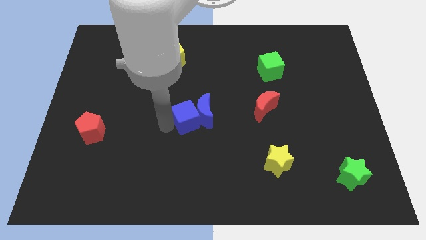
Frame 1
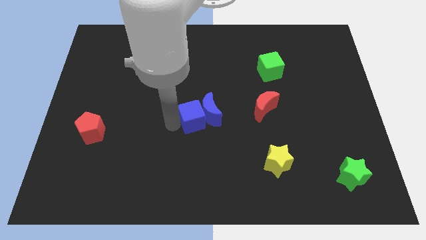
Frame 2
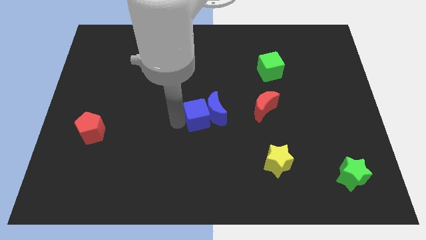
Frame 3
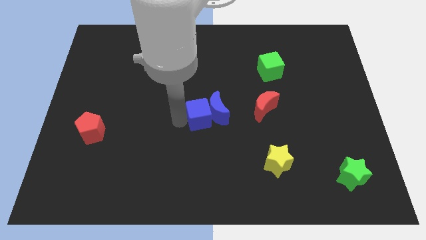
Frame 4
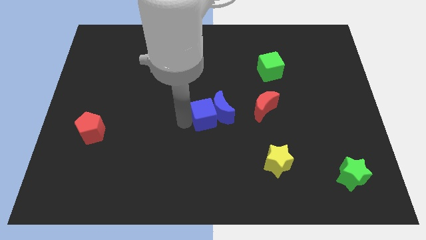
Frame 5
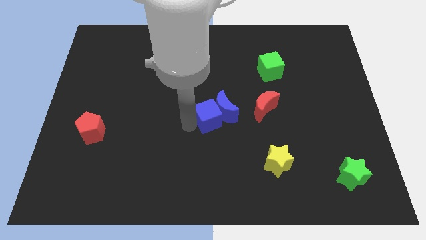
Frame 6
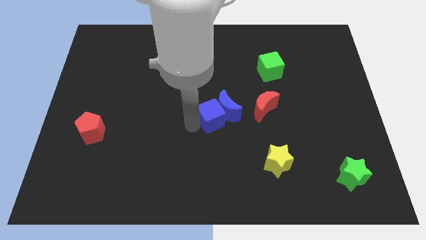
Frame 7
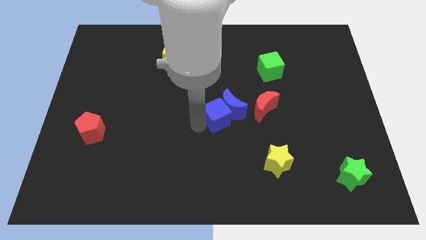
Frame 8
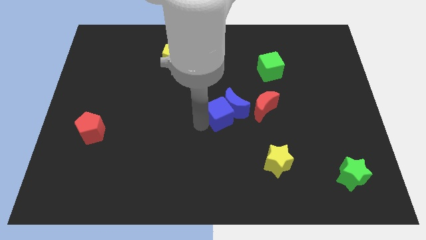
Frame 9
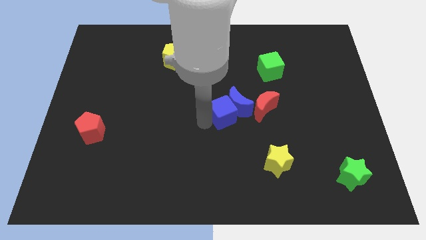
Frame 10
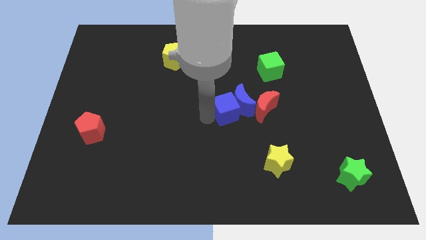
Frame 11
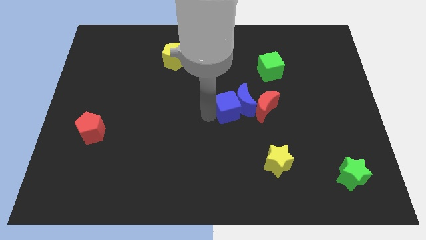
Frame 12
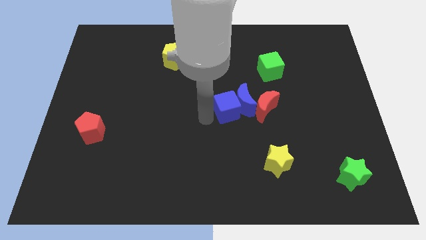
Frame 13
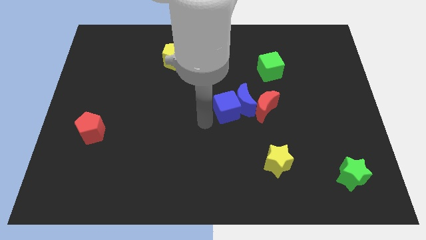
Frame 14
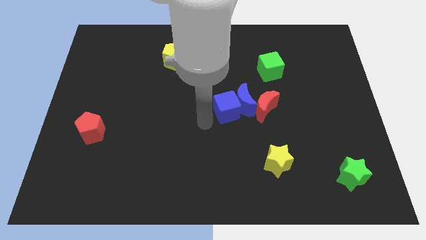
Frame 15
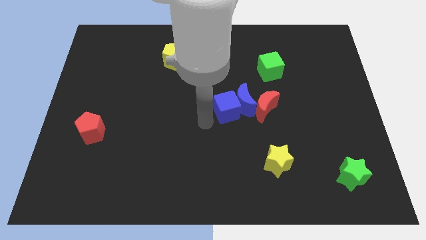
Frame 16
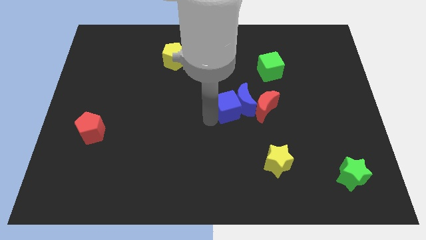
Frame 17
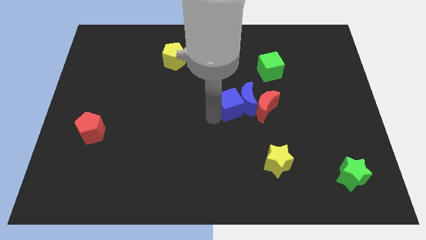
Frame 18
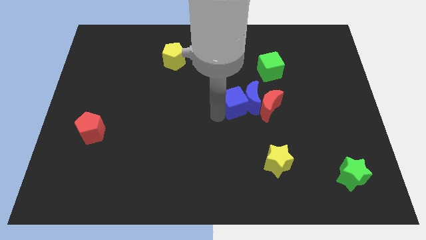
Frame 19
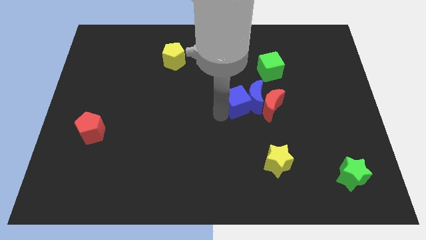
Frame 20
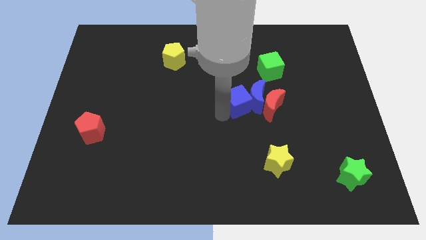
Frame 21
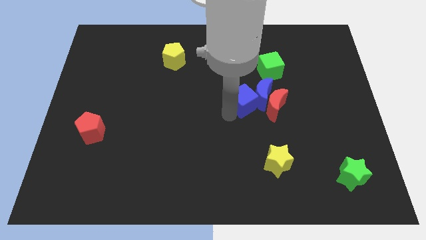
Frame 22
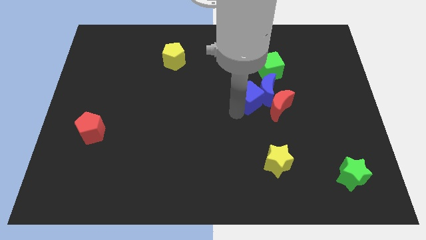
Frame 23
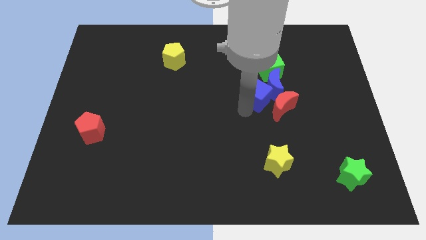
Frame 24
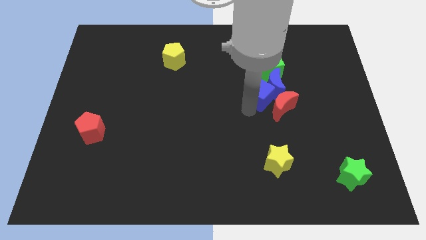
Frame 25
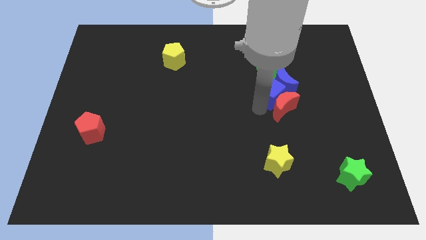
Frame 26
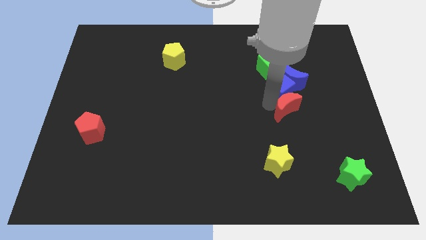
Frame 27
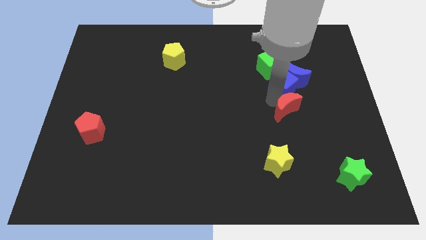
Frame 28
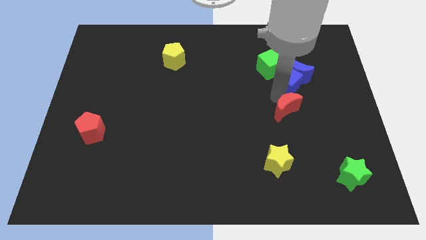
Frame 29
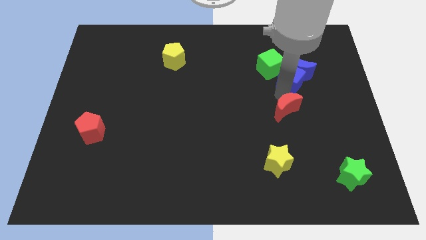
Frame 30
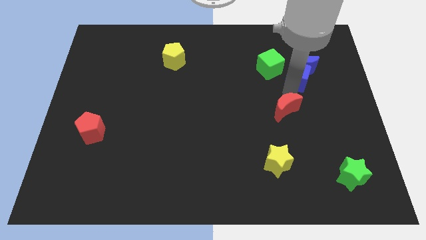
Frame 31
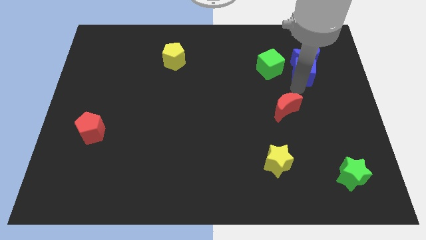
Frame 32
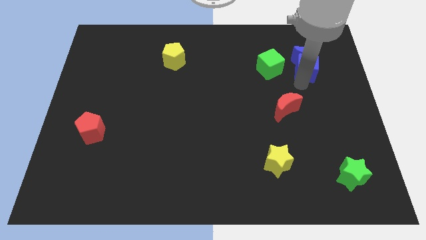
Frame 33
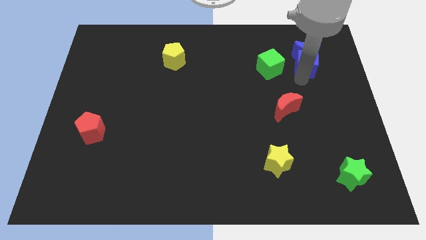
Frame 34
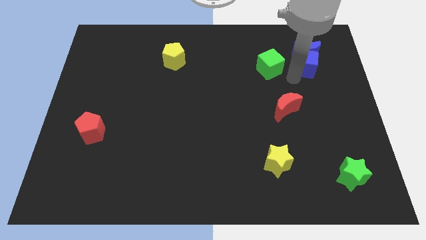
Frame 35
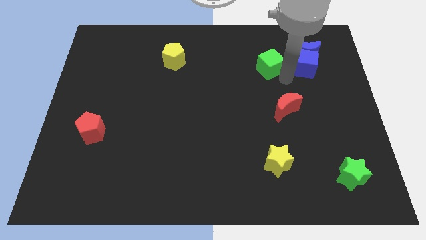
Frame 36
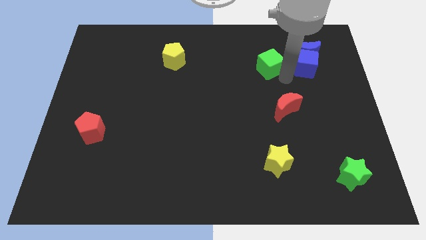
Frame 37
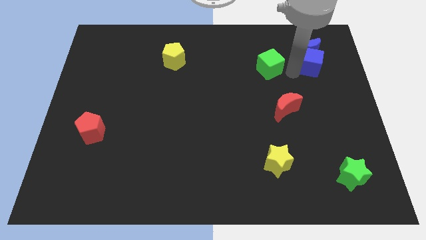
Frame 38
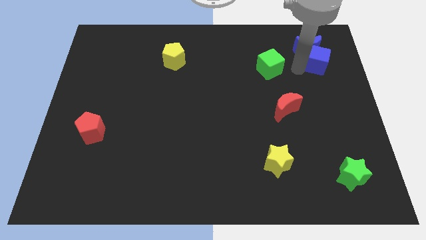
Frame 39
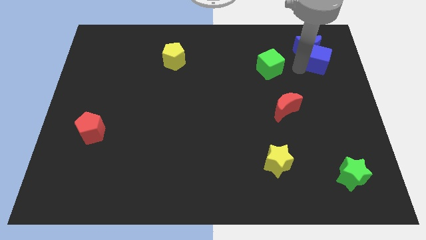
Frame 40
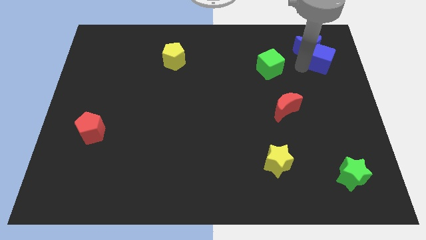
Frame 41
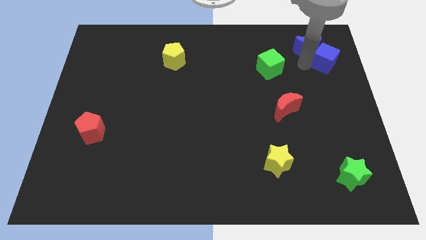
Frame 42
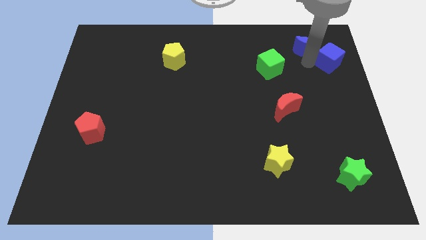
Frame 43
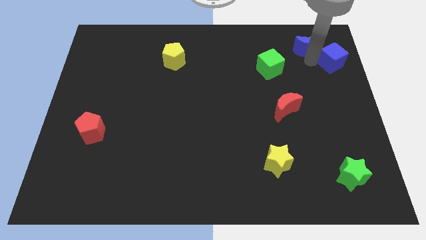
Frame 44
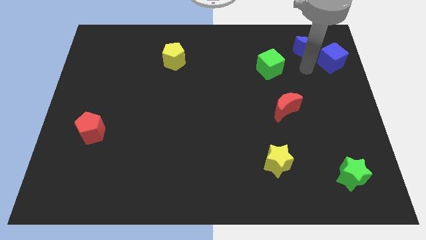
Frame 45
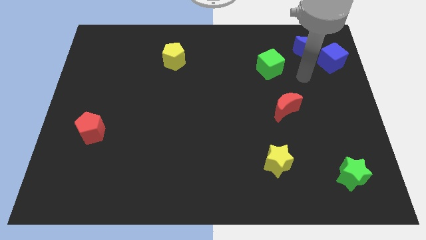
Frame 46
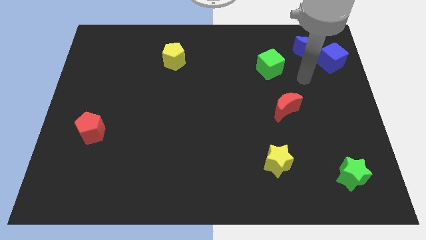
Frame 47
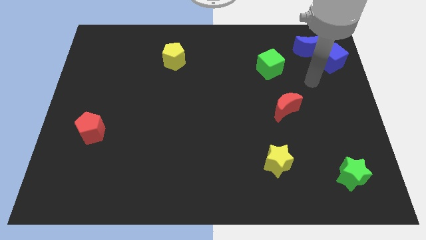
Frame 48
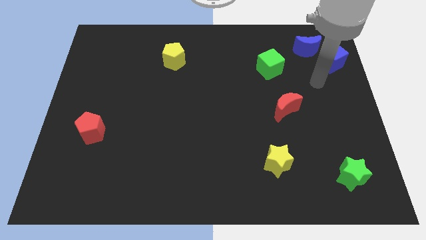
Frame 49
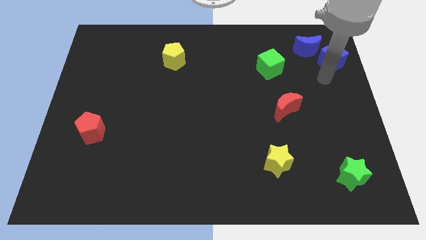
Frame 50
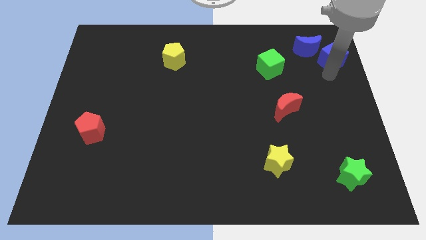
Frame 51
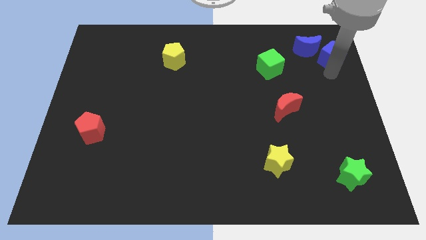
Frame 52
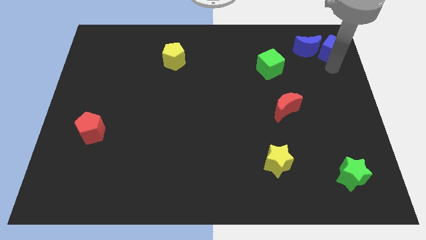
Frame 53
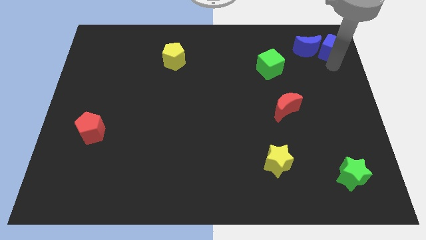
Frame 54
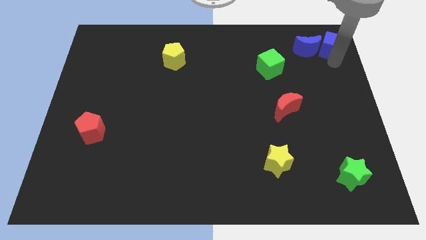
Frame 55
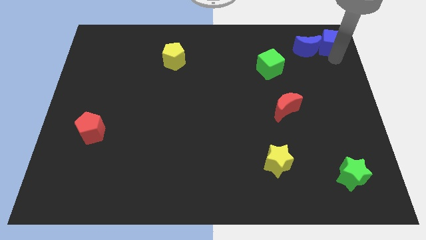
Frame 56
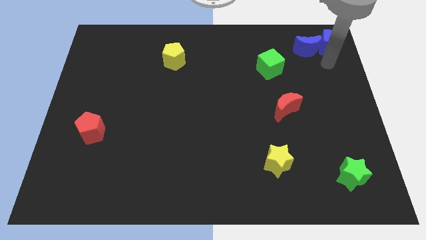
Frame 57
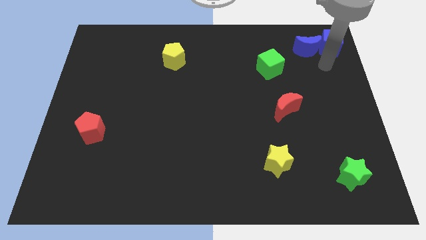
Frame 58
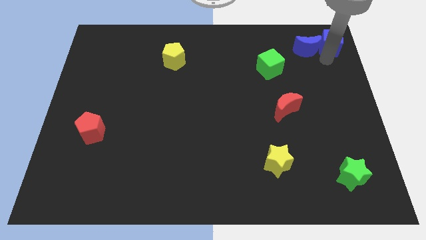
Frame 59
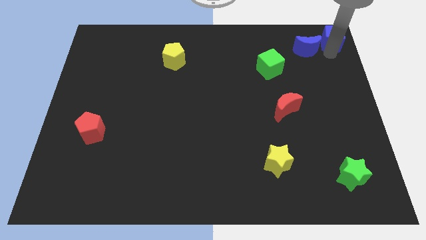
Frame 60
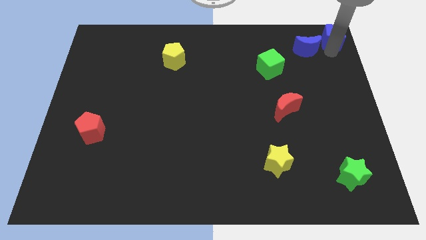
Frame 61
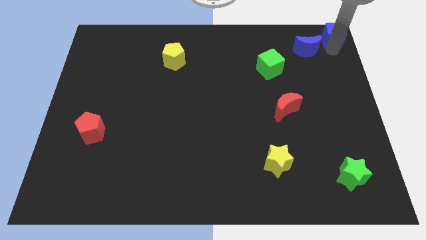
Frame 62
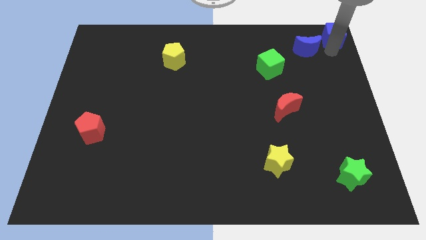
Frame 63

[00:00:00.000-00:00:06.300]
place the blue blocks vertically above the green star

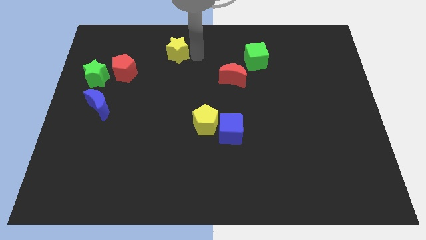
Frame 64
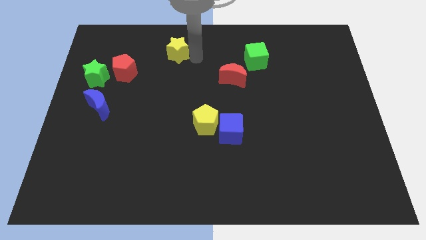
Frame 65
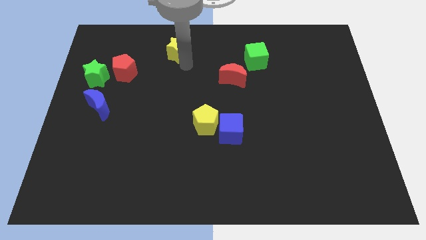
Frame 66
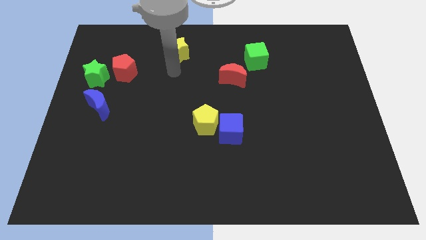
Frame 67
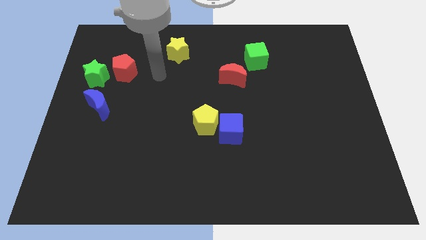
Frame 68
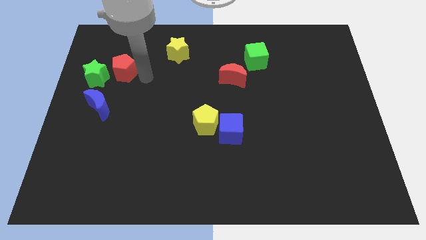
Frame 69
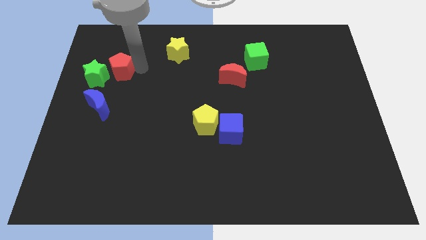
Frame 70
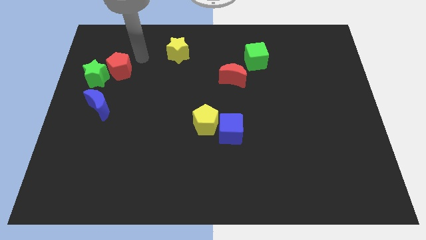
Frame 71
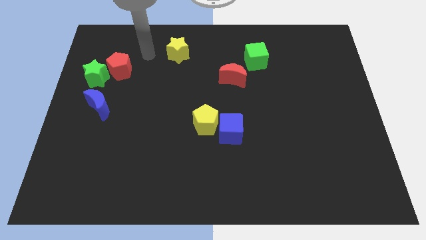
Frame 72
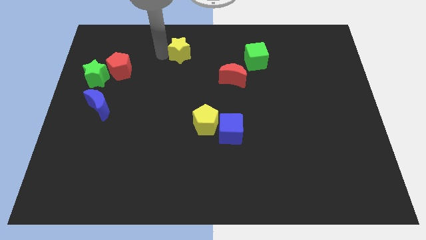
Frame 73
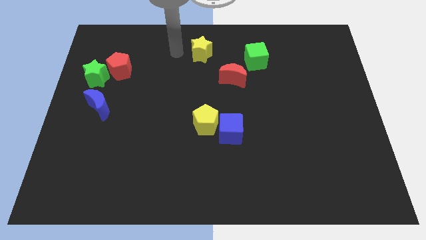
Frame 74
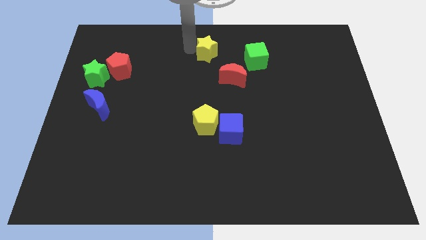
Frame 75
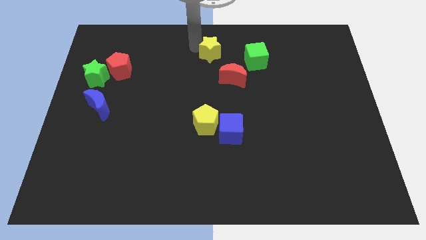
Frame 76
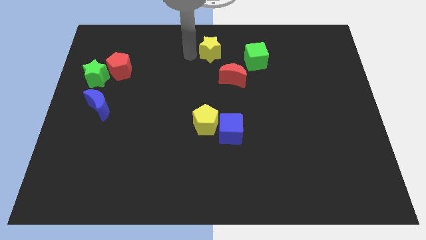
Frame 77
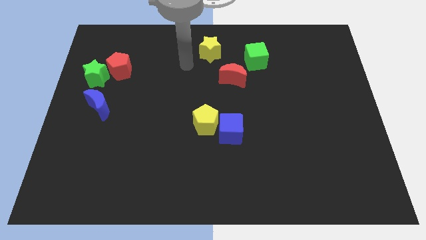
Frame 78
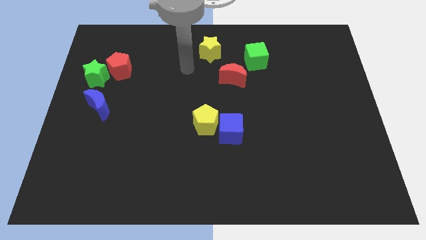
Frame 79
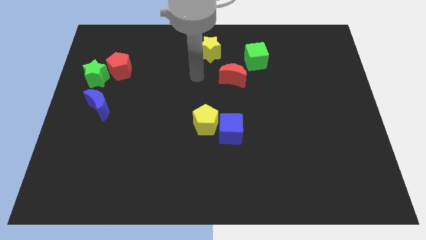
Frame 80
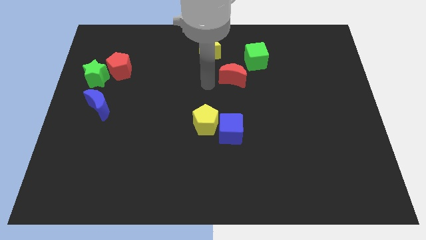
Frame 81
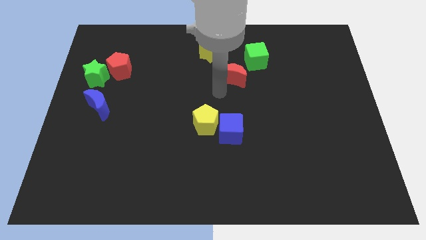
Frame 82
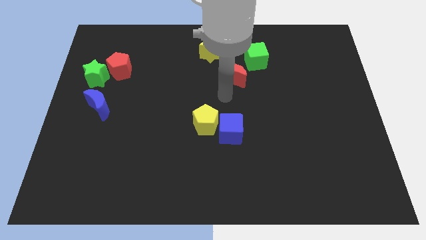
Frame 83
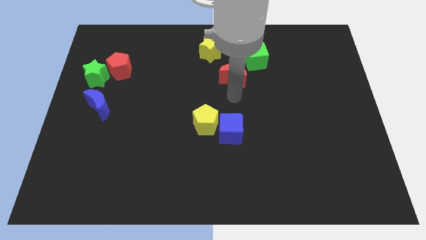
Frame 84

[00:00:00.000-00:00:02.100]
push the yellow star towards the top centre of the board

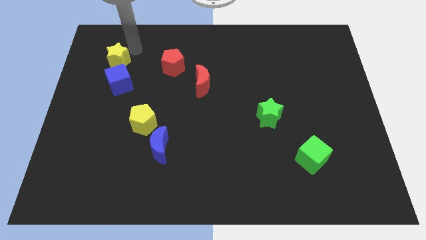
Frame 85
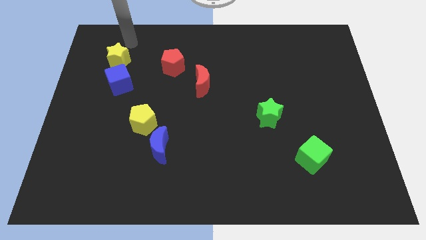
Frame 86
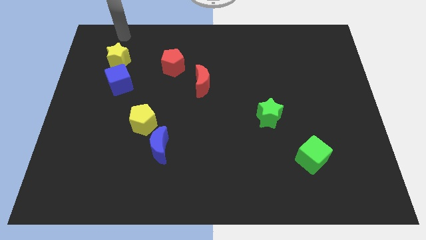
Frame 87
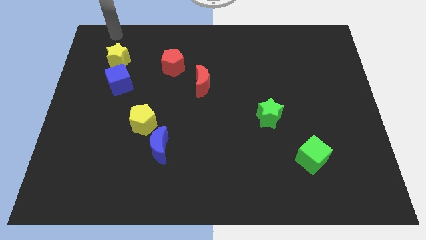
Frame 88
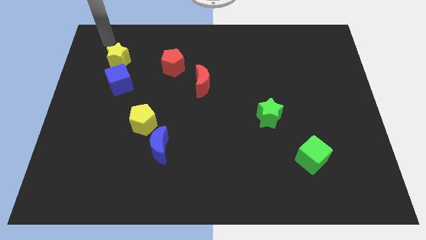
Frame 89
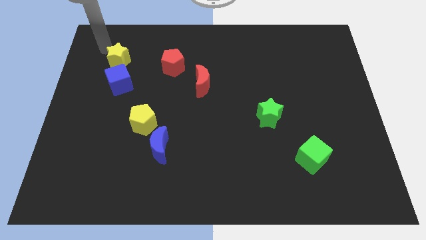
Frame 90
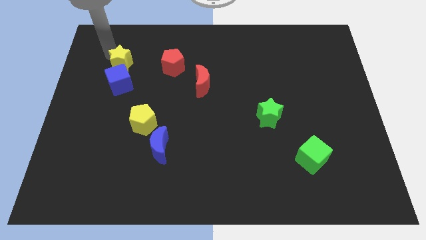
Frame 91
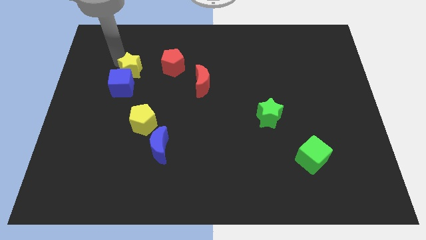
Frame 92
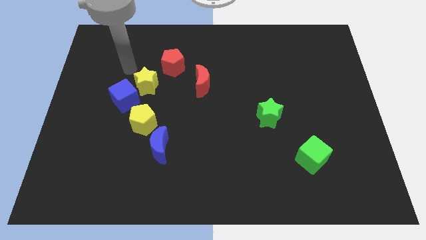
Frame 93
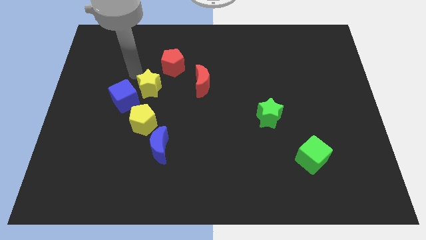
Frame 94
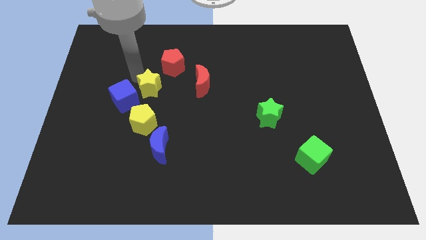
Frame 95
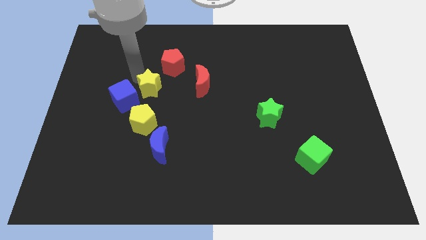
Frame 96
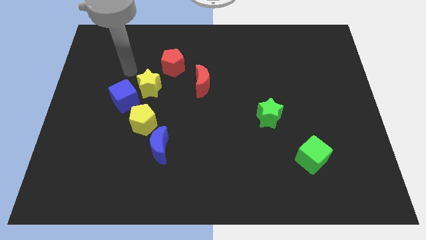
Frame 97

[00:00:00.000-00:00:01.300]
place yellow star in between blue cube and red pentagon diagonally
